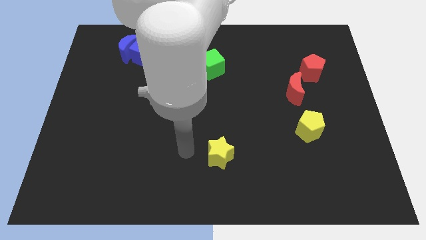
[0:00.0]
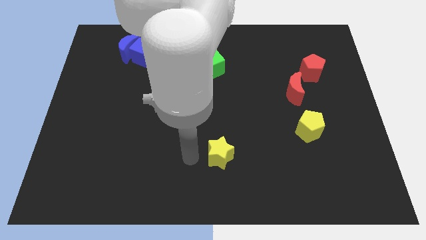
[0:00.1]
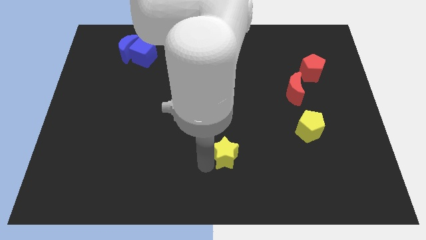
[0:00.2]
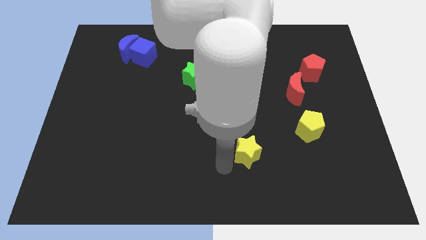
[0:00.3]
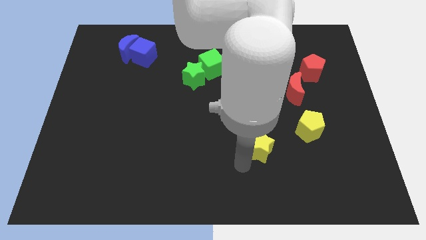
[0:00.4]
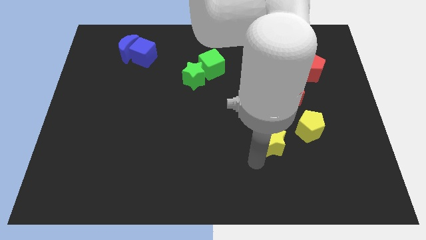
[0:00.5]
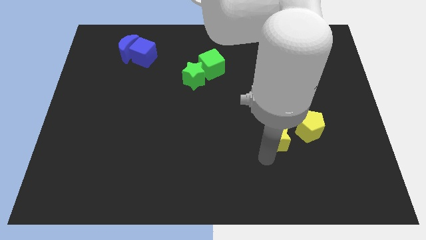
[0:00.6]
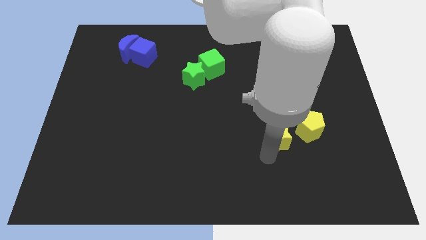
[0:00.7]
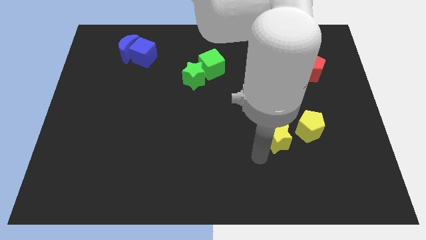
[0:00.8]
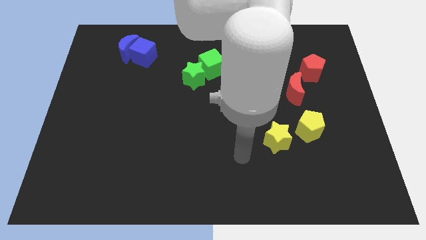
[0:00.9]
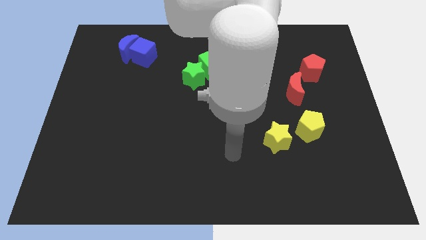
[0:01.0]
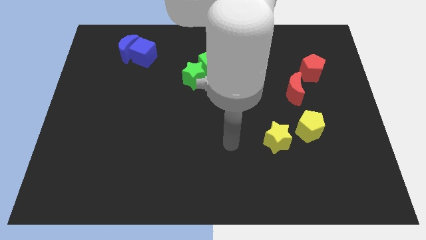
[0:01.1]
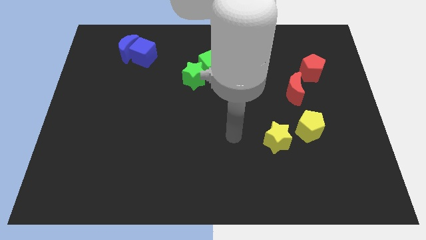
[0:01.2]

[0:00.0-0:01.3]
push the yellow star to the left of the yellow pentagon

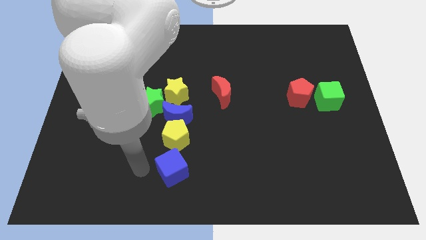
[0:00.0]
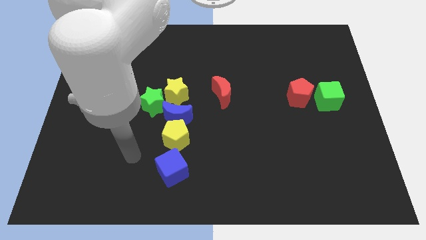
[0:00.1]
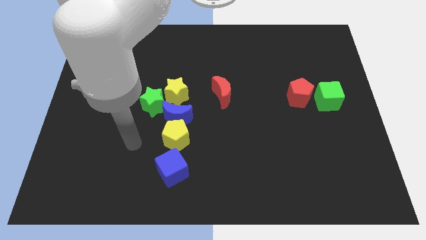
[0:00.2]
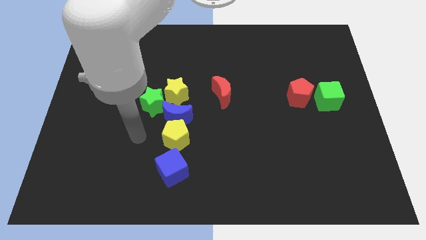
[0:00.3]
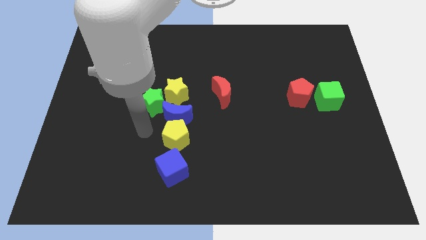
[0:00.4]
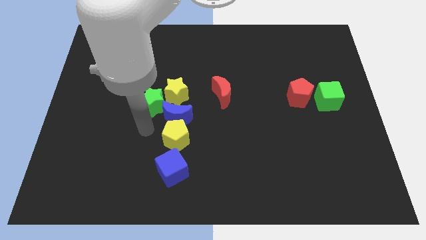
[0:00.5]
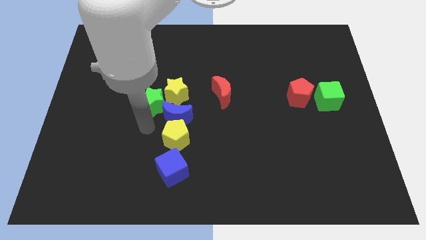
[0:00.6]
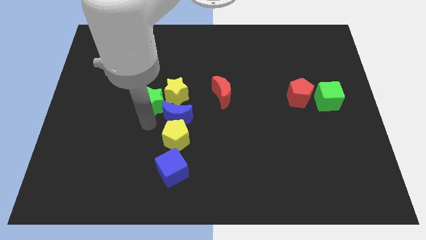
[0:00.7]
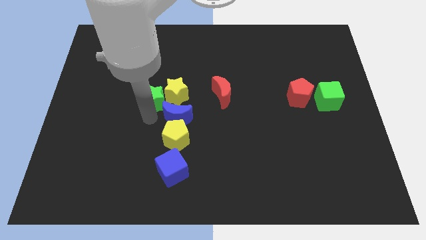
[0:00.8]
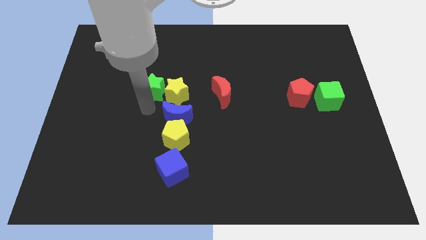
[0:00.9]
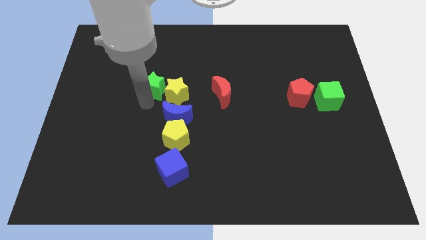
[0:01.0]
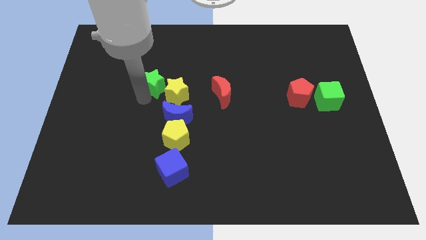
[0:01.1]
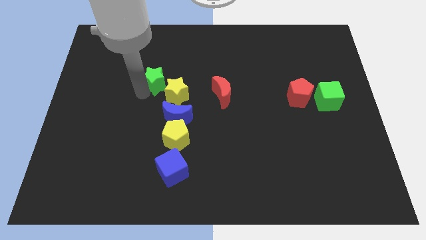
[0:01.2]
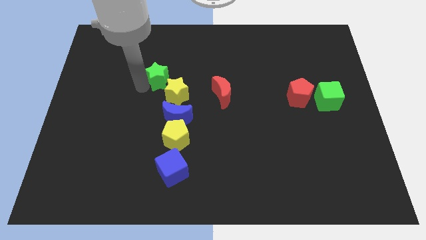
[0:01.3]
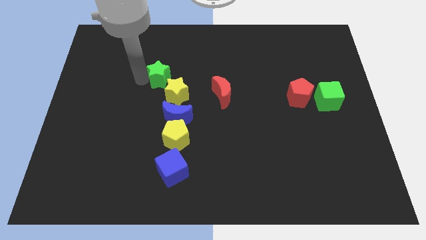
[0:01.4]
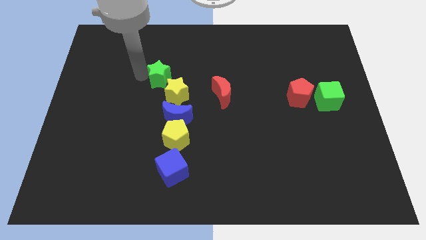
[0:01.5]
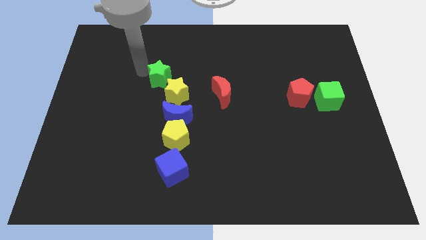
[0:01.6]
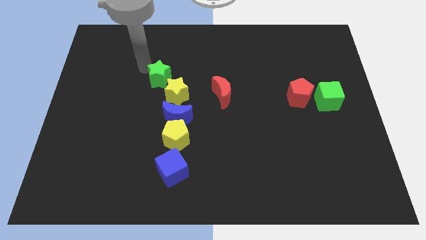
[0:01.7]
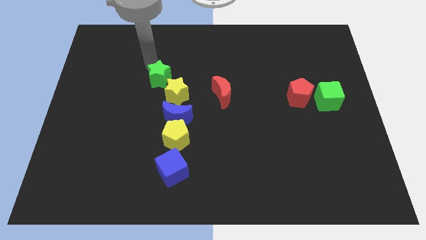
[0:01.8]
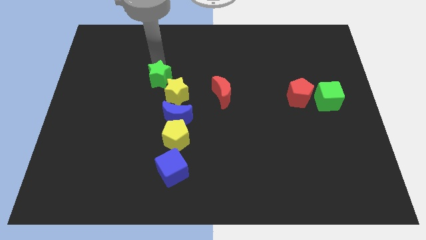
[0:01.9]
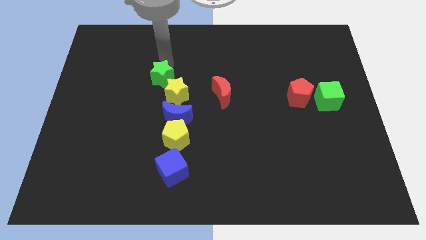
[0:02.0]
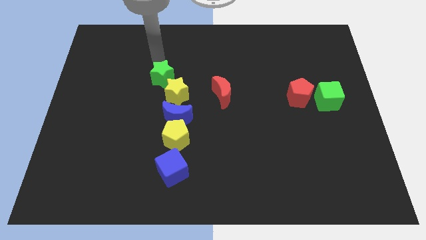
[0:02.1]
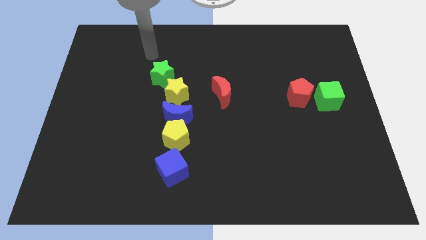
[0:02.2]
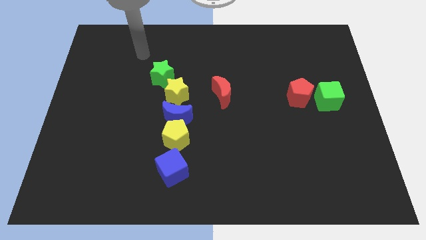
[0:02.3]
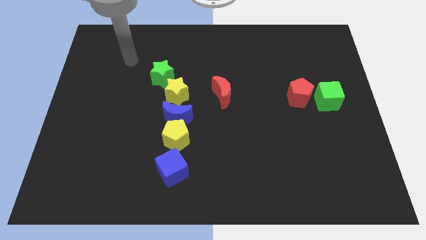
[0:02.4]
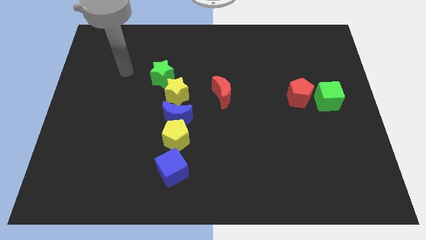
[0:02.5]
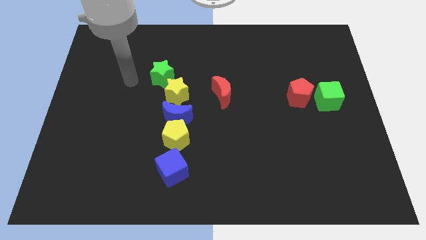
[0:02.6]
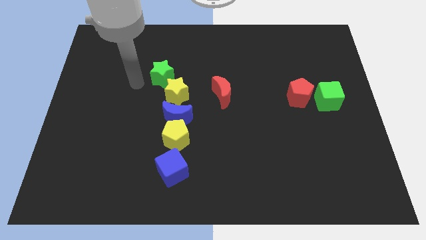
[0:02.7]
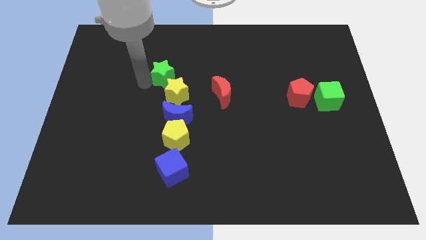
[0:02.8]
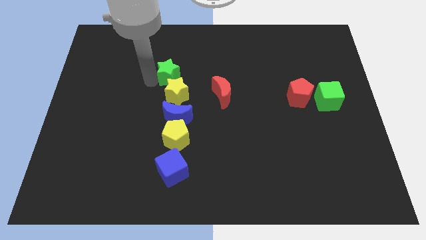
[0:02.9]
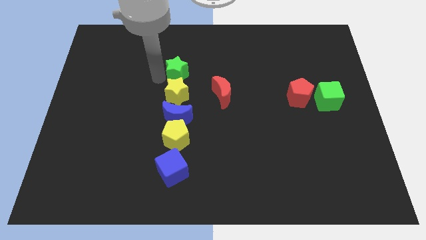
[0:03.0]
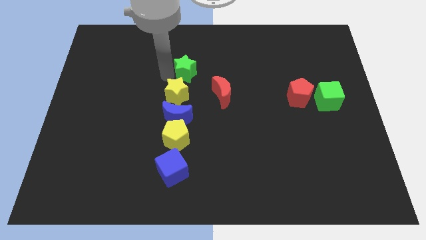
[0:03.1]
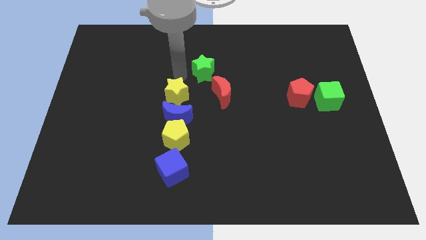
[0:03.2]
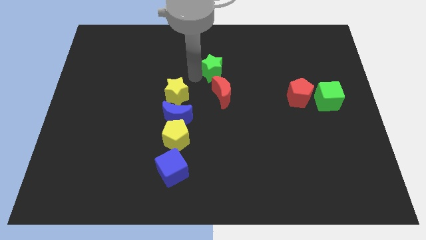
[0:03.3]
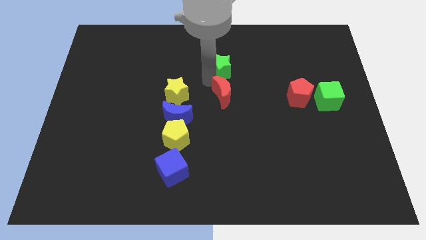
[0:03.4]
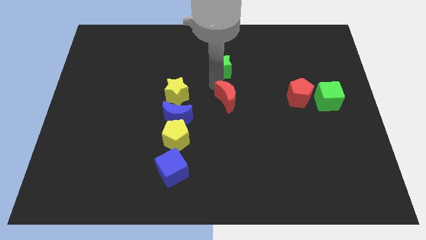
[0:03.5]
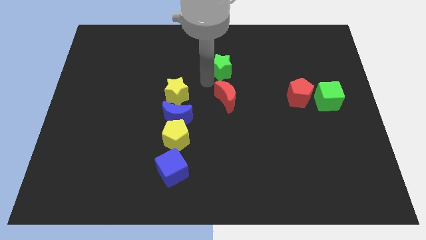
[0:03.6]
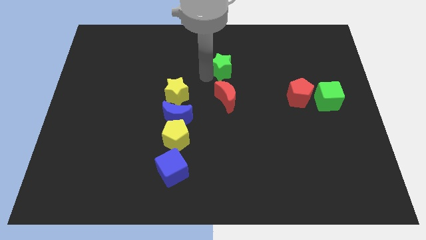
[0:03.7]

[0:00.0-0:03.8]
move the green star towards the top right corner of the board

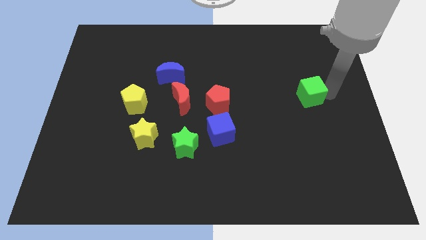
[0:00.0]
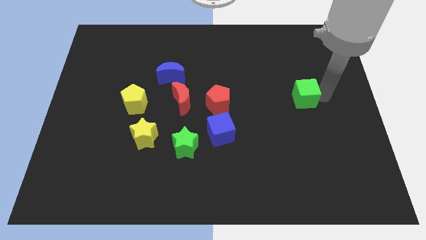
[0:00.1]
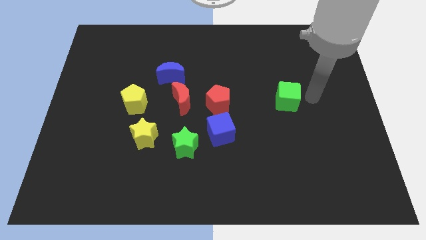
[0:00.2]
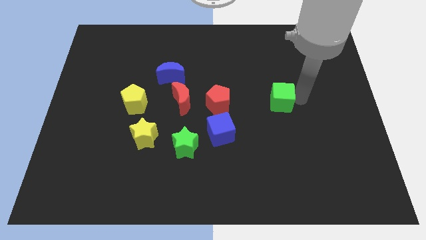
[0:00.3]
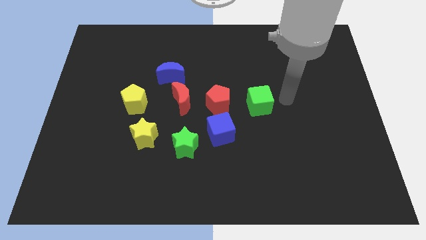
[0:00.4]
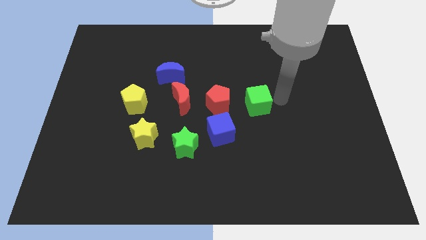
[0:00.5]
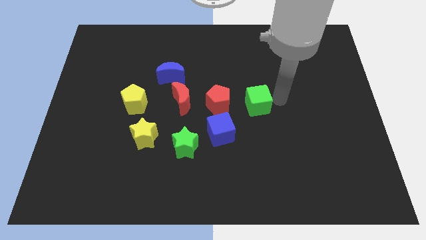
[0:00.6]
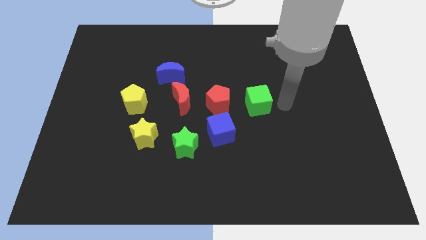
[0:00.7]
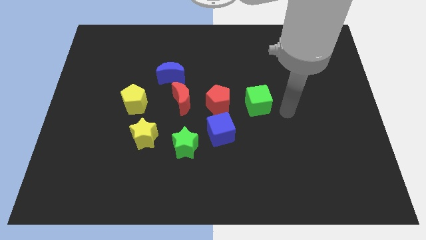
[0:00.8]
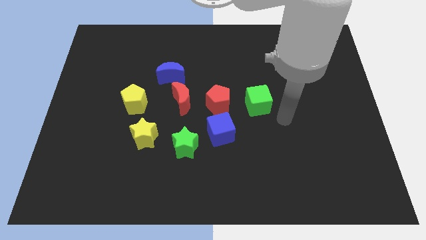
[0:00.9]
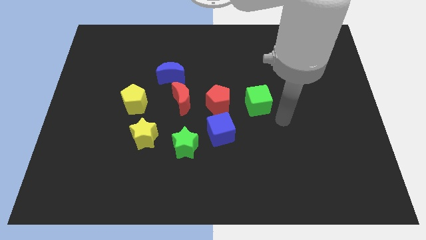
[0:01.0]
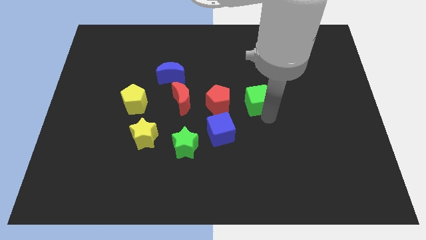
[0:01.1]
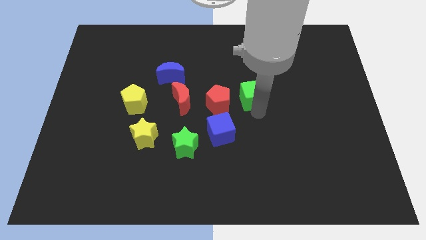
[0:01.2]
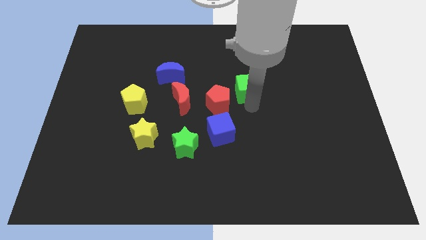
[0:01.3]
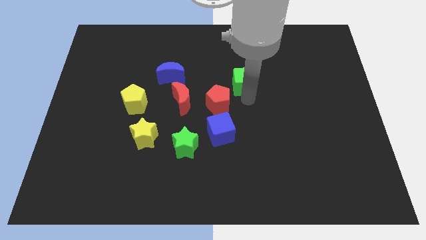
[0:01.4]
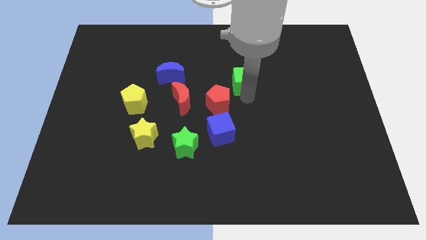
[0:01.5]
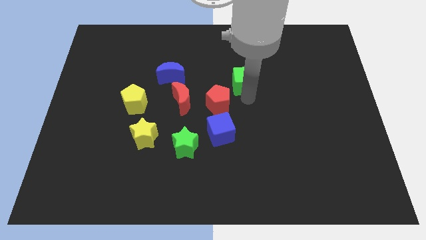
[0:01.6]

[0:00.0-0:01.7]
place the green cube diagonal to the red pentagon

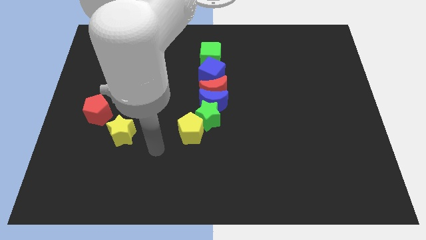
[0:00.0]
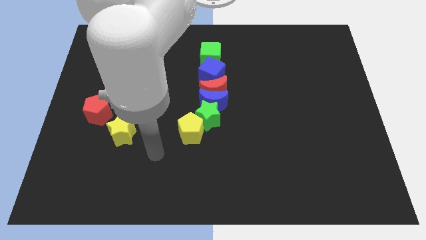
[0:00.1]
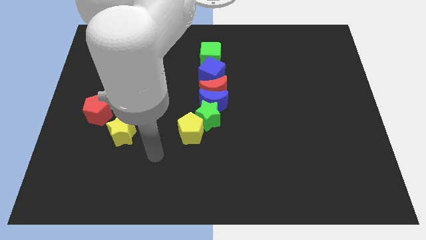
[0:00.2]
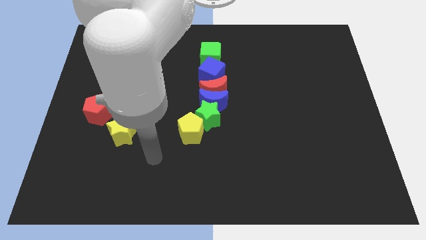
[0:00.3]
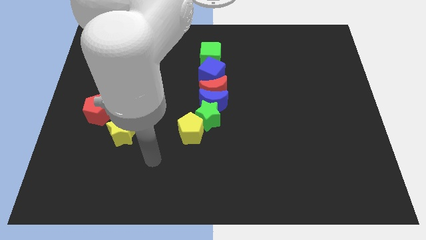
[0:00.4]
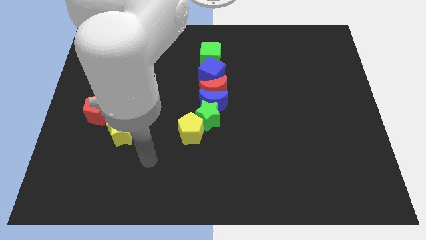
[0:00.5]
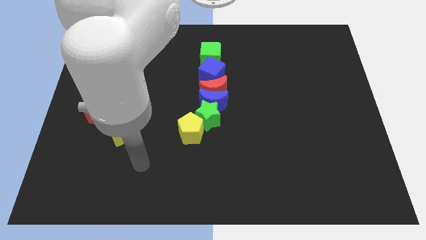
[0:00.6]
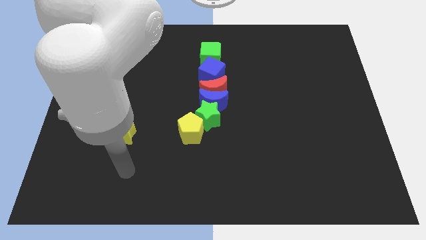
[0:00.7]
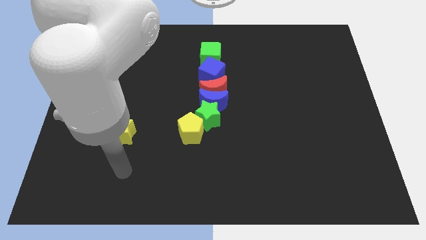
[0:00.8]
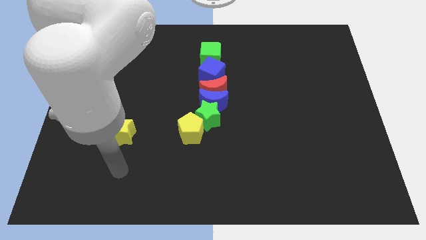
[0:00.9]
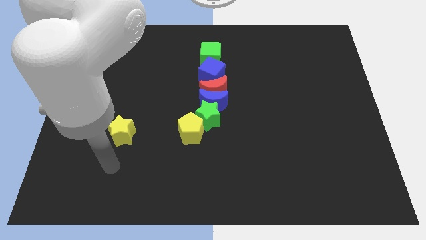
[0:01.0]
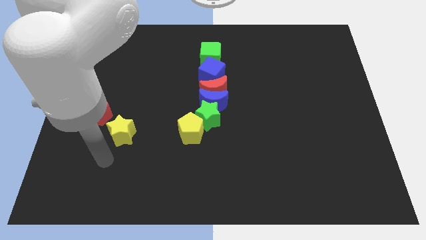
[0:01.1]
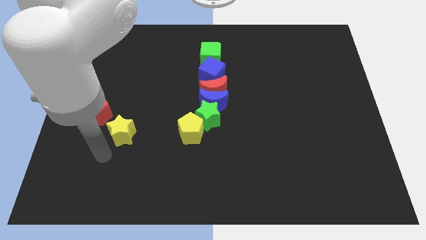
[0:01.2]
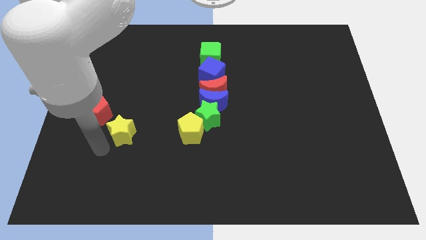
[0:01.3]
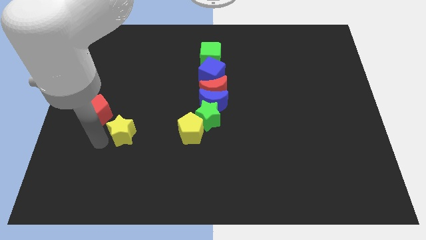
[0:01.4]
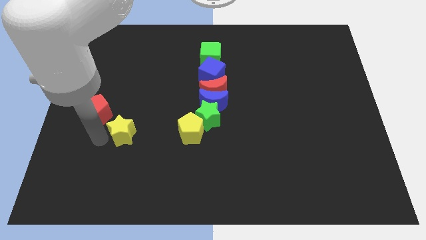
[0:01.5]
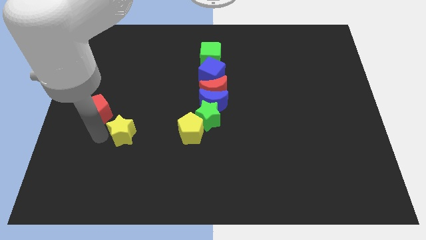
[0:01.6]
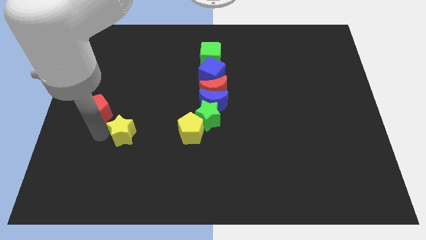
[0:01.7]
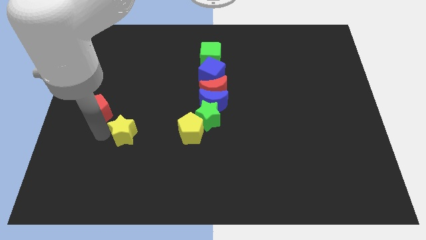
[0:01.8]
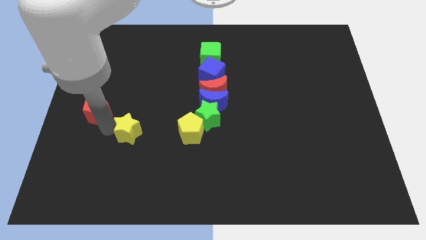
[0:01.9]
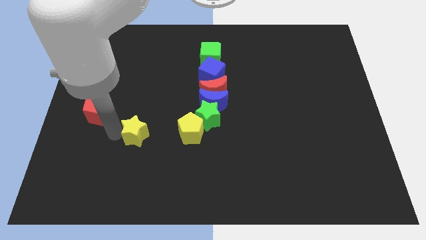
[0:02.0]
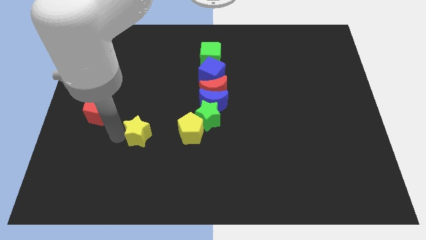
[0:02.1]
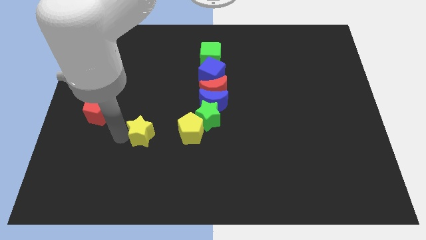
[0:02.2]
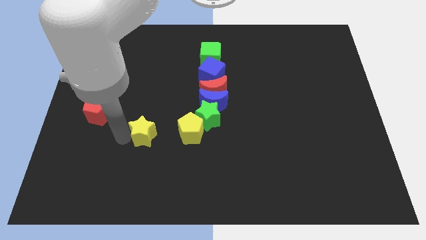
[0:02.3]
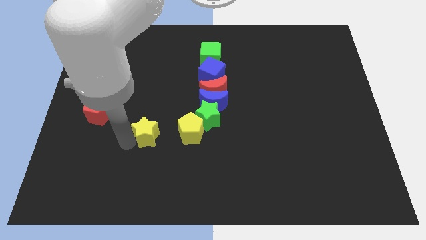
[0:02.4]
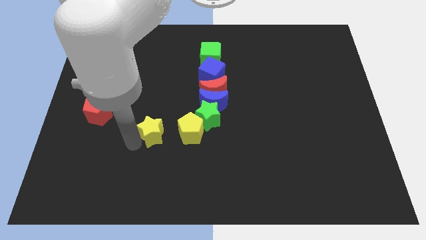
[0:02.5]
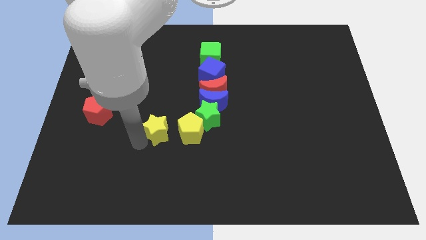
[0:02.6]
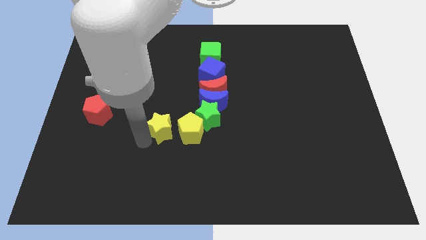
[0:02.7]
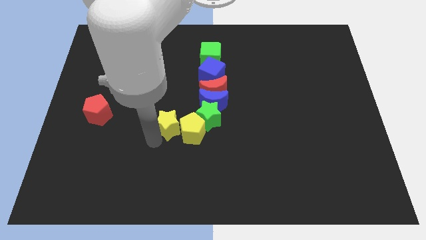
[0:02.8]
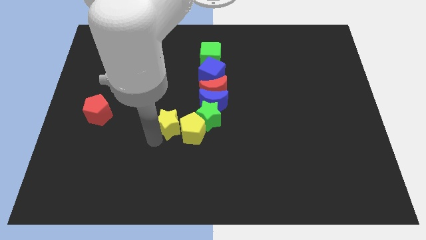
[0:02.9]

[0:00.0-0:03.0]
move the yellow star to the left of the yellow pentagon
